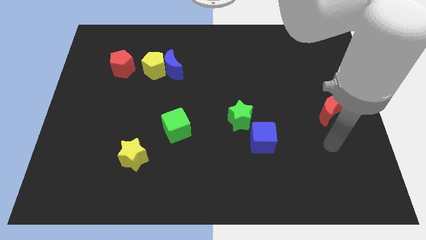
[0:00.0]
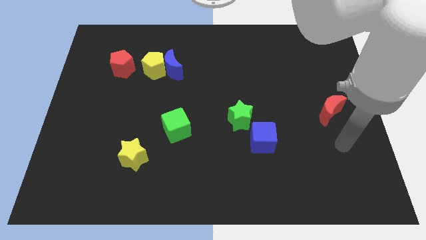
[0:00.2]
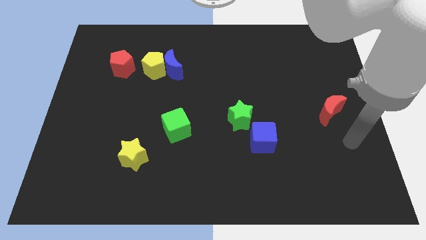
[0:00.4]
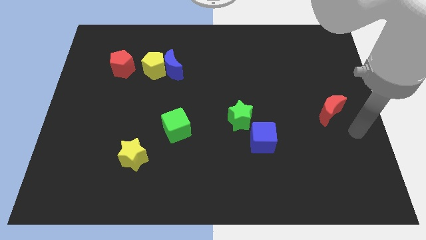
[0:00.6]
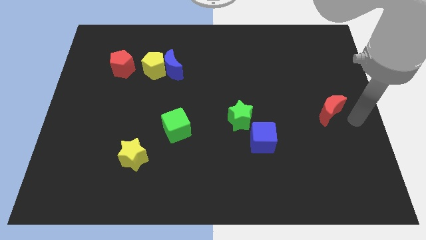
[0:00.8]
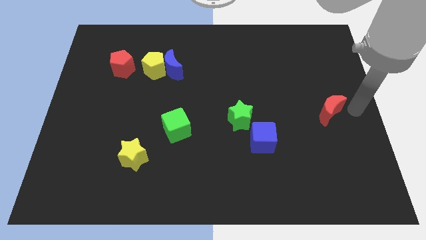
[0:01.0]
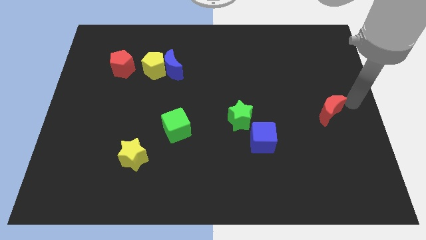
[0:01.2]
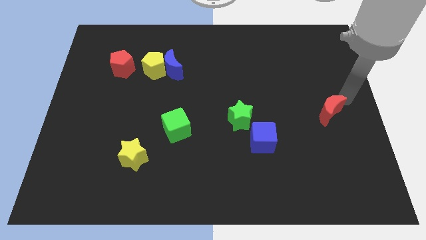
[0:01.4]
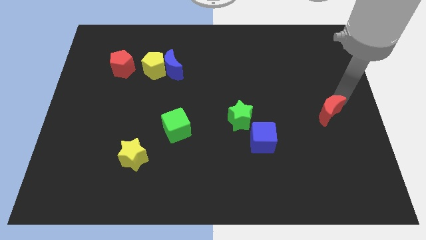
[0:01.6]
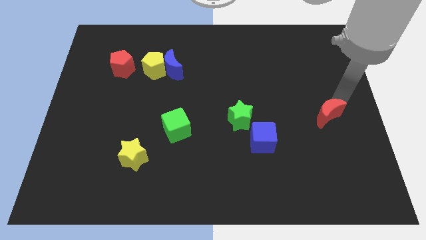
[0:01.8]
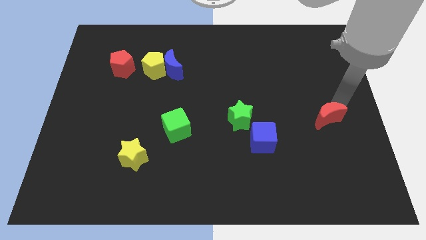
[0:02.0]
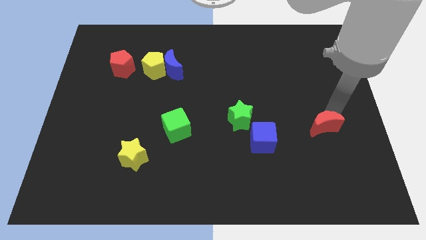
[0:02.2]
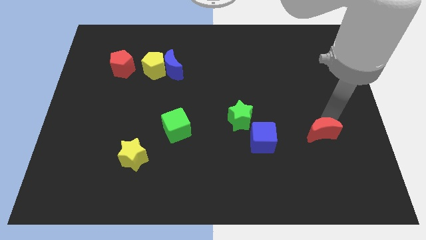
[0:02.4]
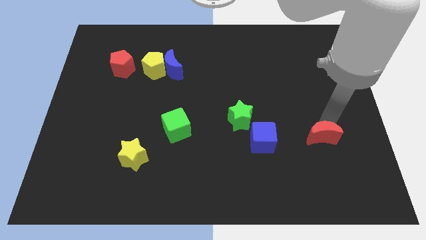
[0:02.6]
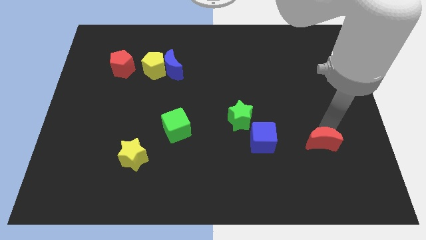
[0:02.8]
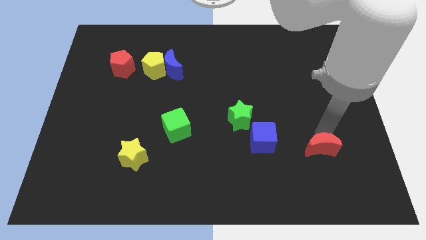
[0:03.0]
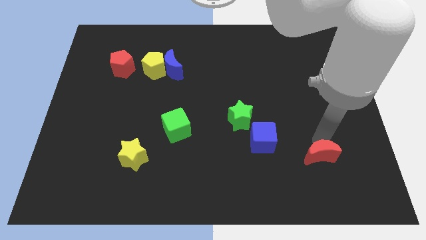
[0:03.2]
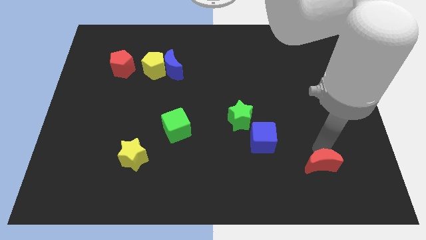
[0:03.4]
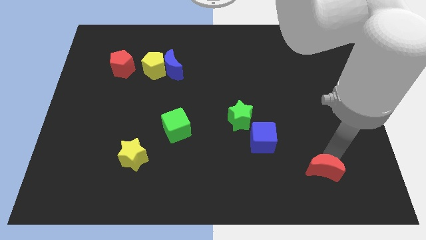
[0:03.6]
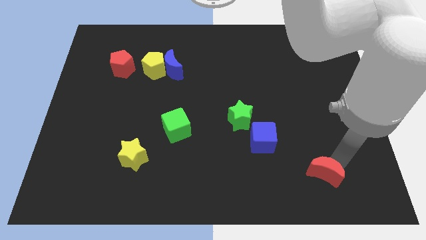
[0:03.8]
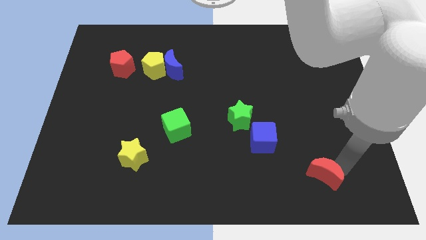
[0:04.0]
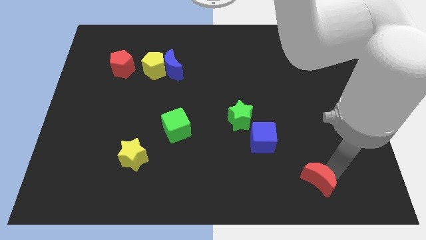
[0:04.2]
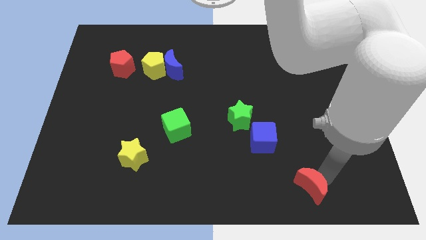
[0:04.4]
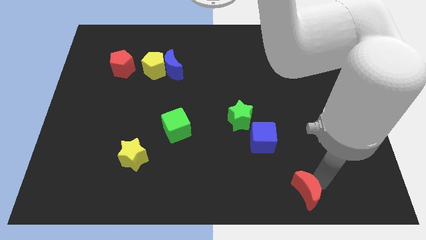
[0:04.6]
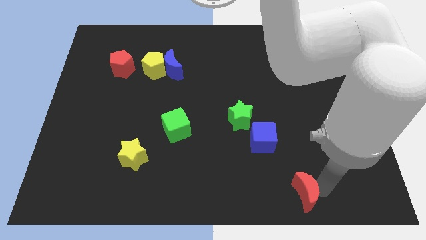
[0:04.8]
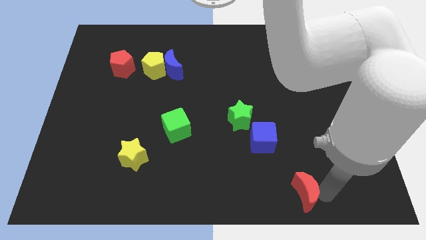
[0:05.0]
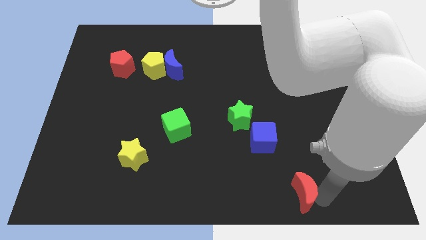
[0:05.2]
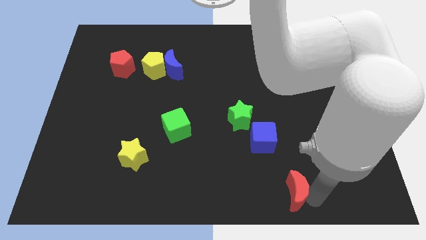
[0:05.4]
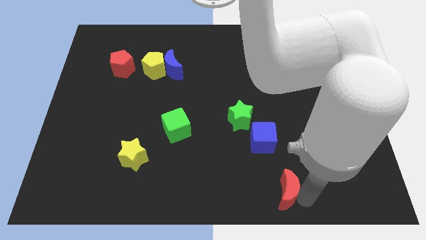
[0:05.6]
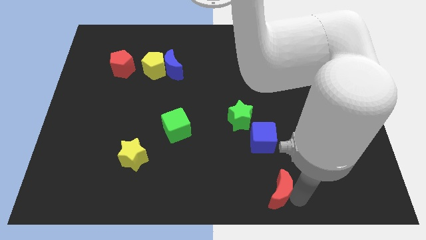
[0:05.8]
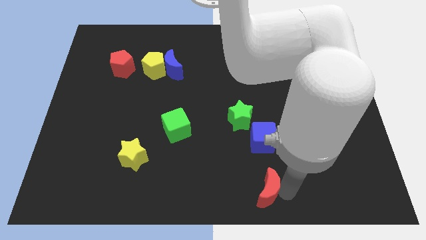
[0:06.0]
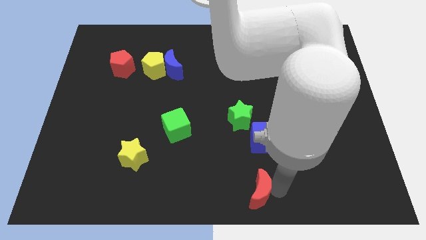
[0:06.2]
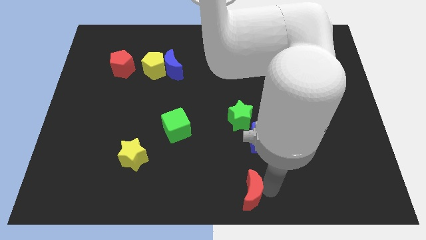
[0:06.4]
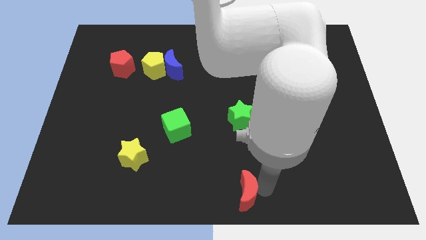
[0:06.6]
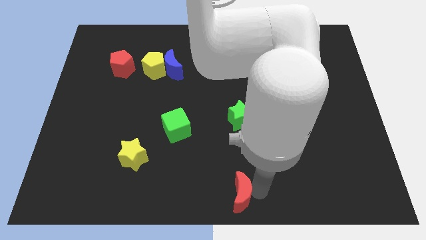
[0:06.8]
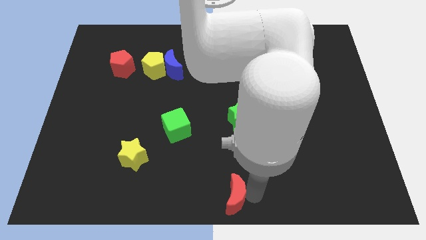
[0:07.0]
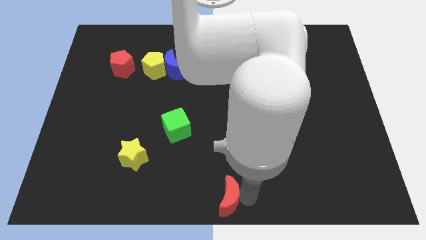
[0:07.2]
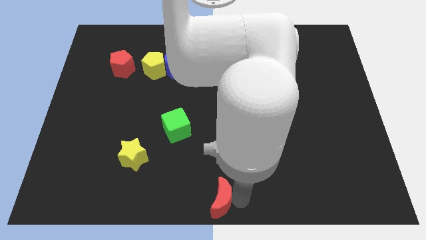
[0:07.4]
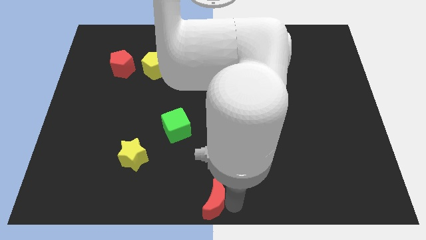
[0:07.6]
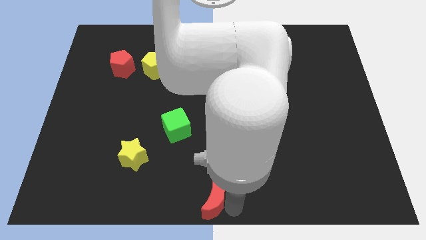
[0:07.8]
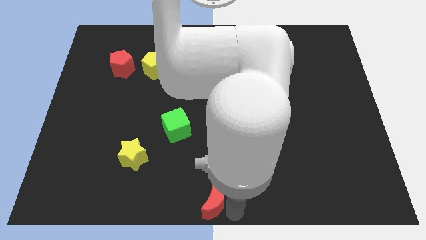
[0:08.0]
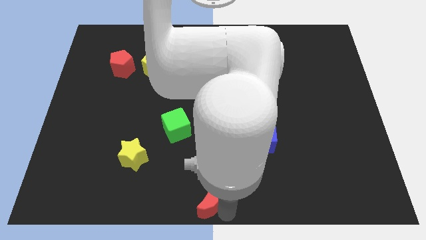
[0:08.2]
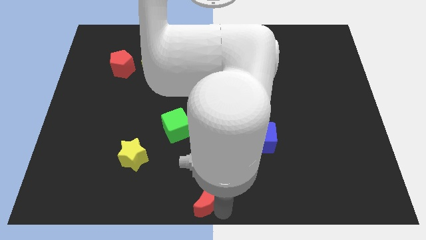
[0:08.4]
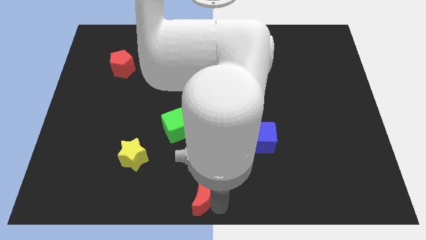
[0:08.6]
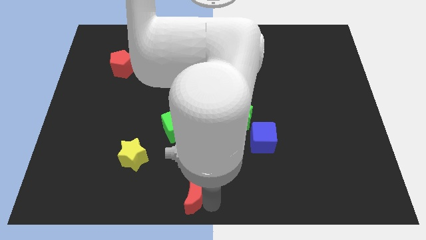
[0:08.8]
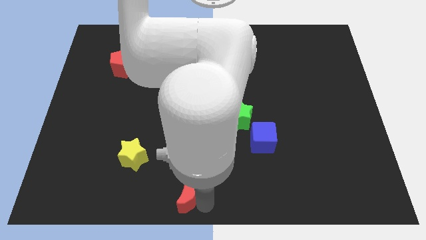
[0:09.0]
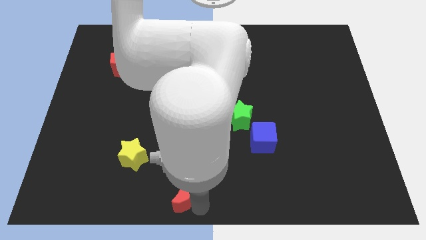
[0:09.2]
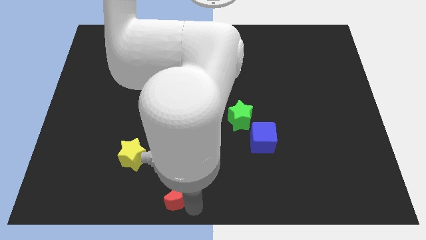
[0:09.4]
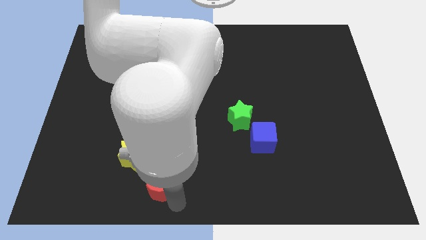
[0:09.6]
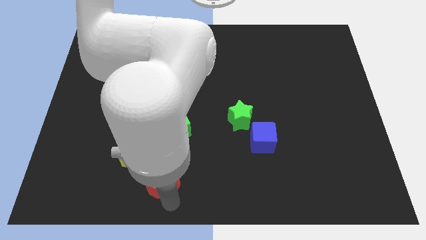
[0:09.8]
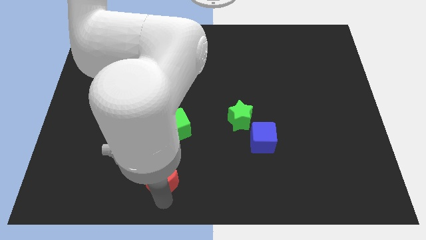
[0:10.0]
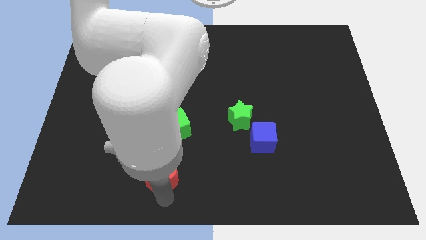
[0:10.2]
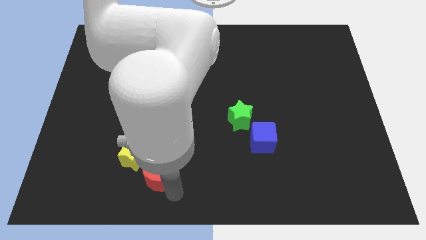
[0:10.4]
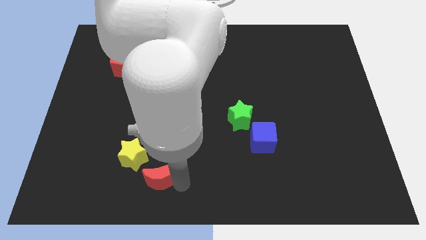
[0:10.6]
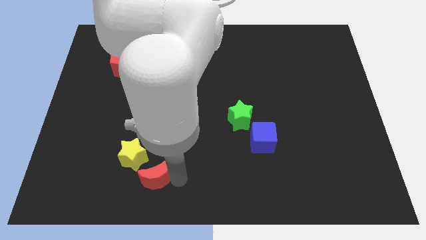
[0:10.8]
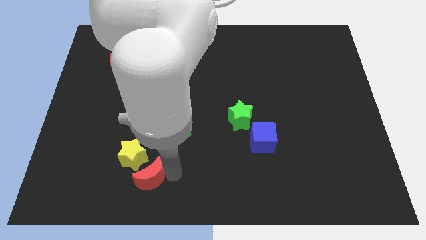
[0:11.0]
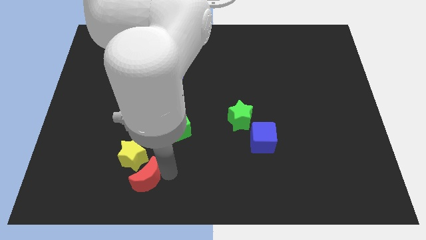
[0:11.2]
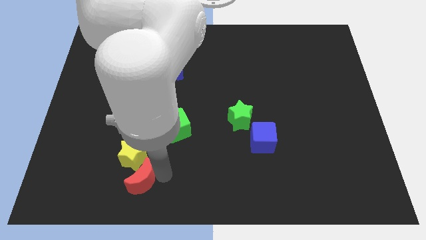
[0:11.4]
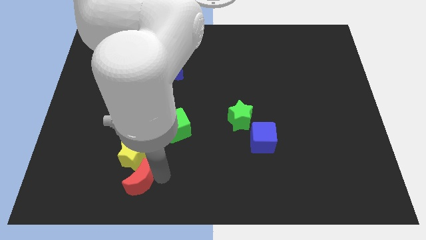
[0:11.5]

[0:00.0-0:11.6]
slide the red moon next to the yellow star

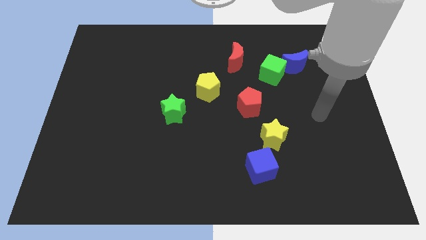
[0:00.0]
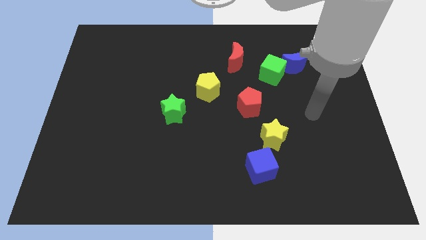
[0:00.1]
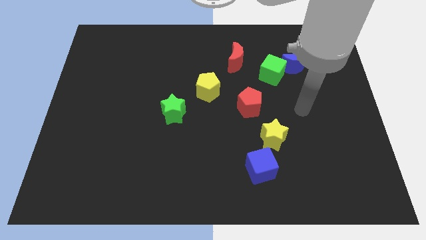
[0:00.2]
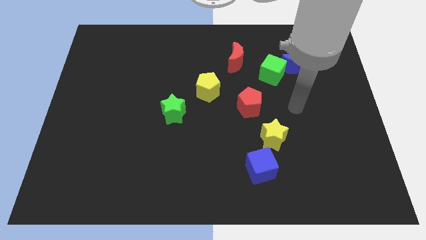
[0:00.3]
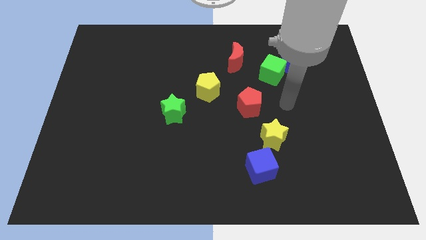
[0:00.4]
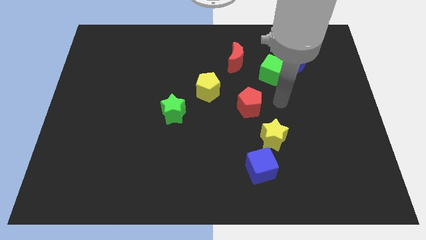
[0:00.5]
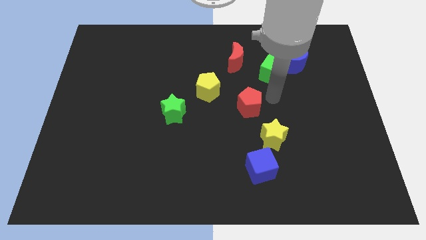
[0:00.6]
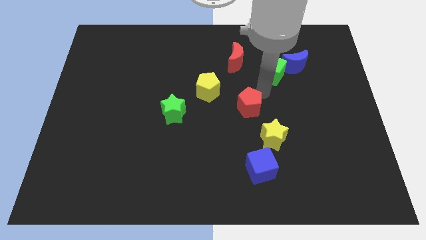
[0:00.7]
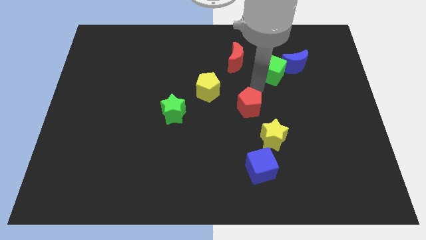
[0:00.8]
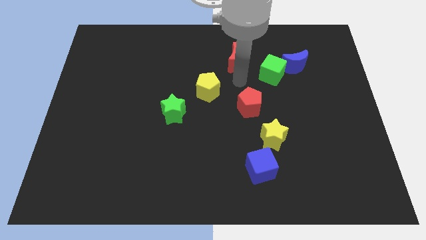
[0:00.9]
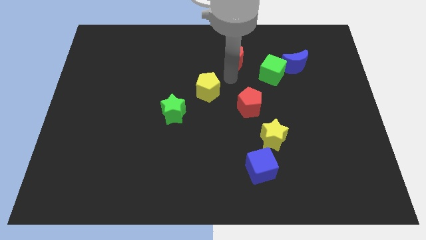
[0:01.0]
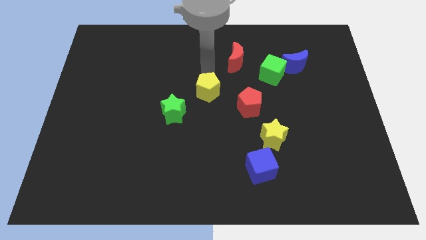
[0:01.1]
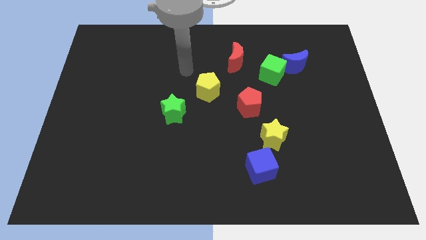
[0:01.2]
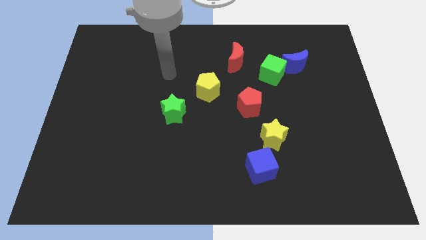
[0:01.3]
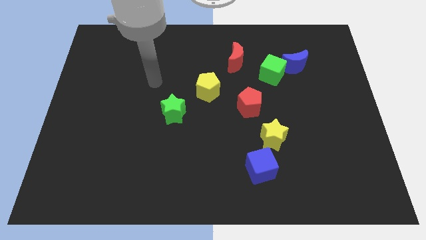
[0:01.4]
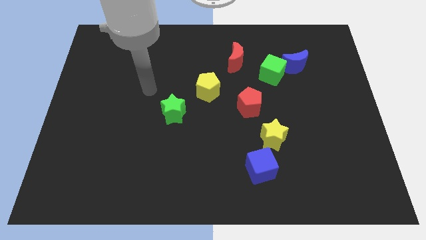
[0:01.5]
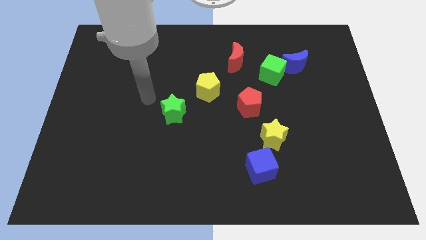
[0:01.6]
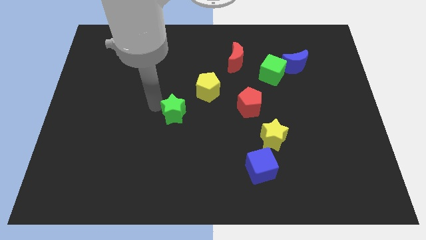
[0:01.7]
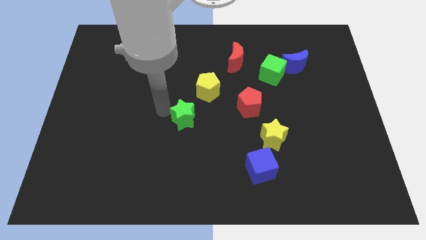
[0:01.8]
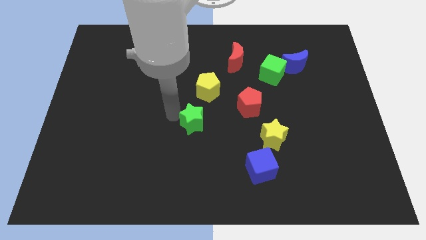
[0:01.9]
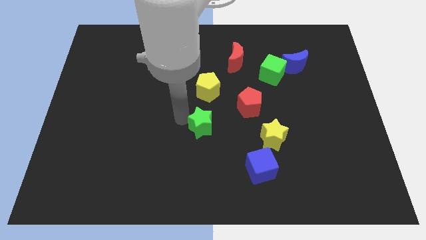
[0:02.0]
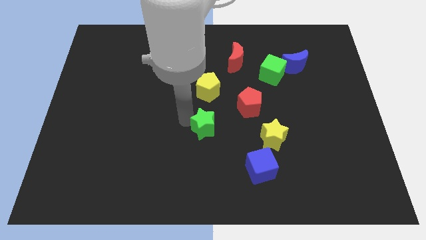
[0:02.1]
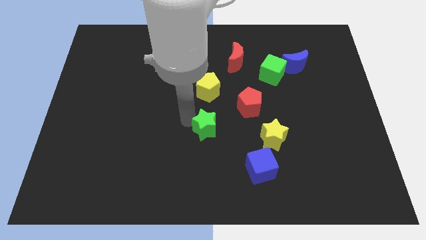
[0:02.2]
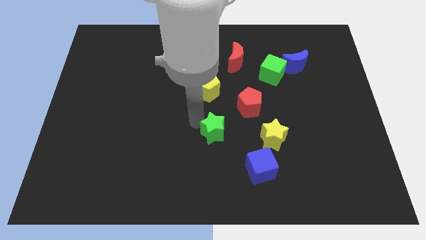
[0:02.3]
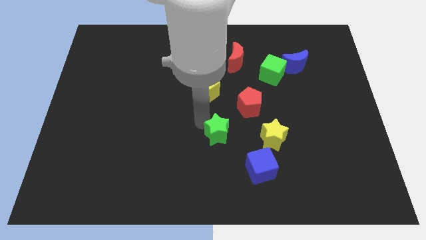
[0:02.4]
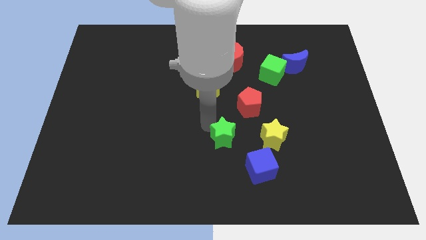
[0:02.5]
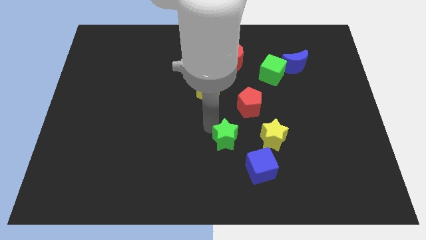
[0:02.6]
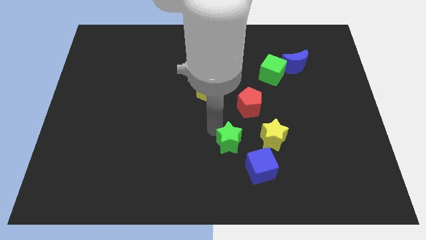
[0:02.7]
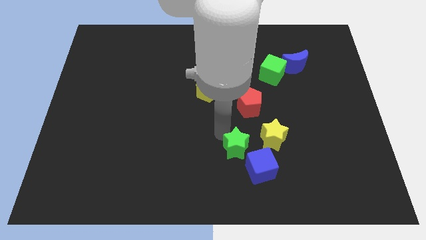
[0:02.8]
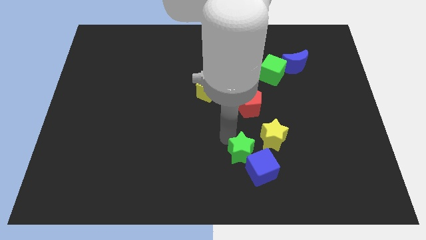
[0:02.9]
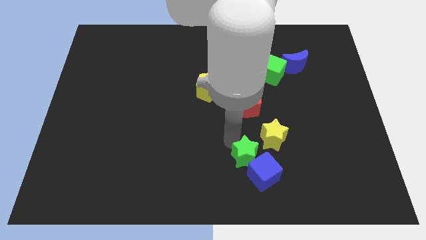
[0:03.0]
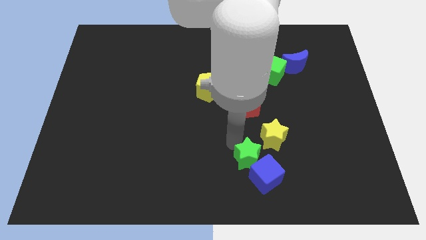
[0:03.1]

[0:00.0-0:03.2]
slide the green star next to the blue cube
